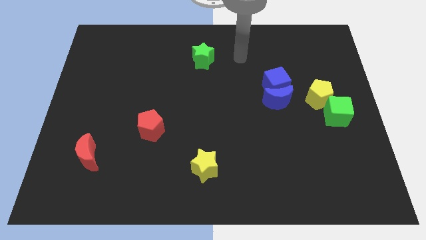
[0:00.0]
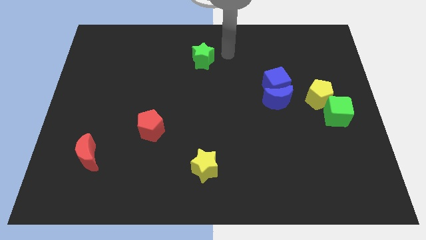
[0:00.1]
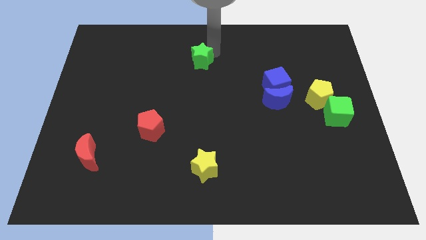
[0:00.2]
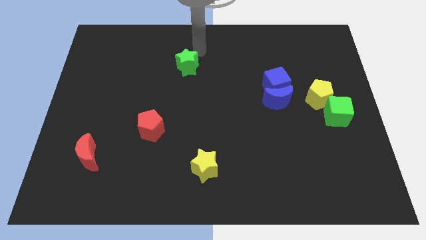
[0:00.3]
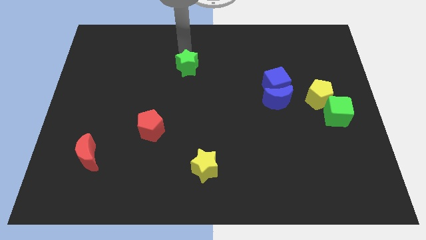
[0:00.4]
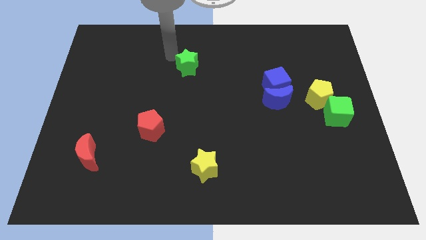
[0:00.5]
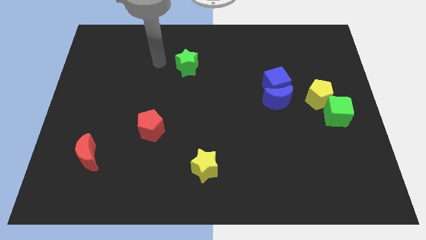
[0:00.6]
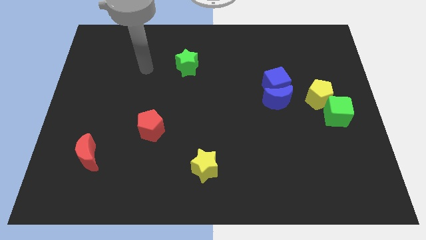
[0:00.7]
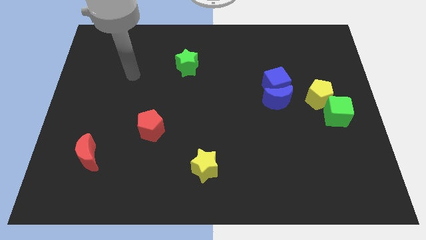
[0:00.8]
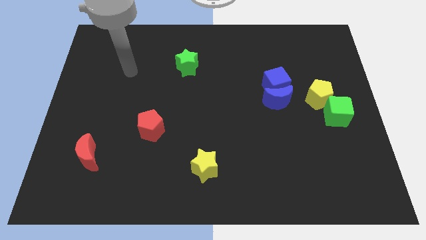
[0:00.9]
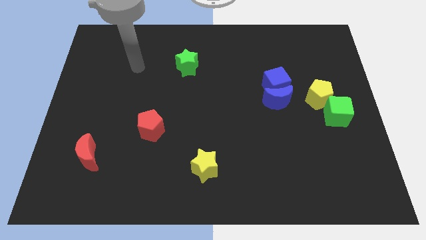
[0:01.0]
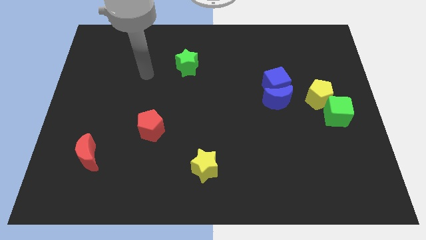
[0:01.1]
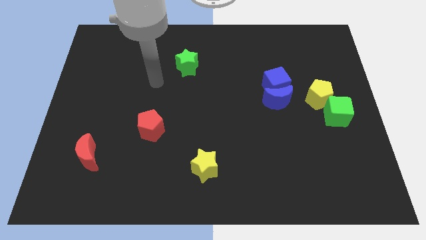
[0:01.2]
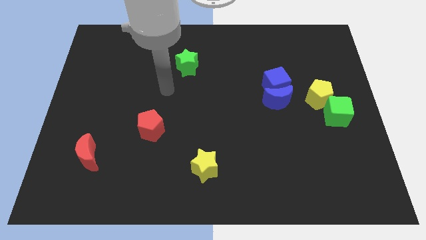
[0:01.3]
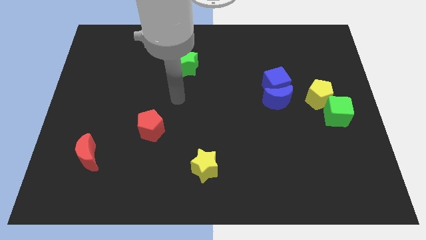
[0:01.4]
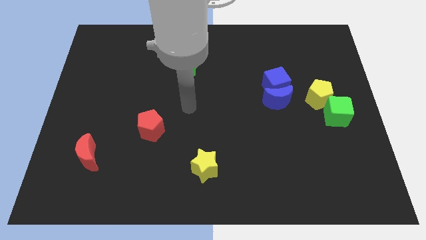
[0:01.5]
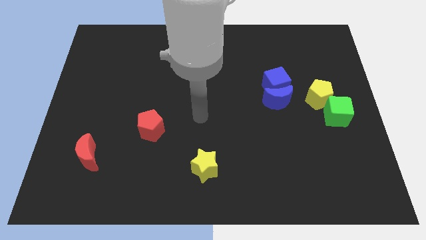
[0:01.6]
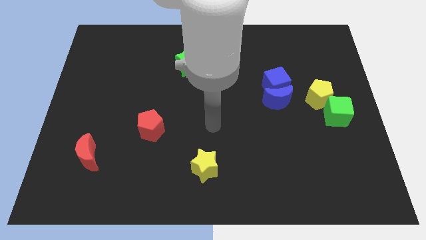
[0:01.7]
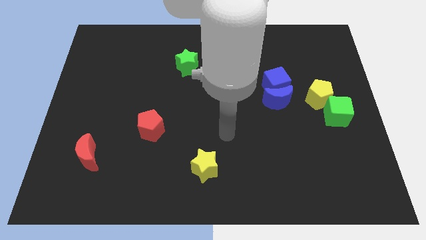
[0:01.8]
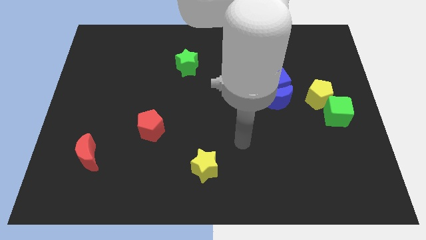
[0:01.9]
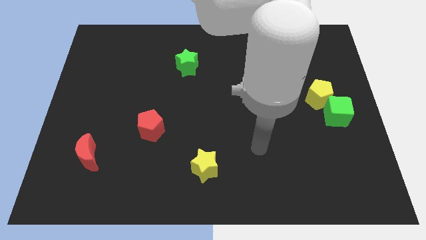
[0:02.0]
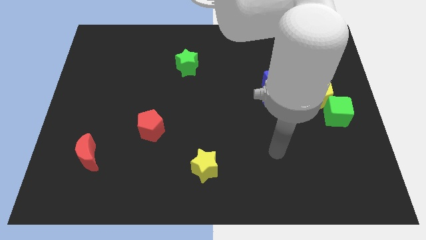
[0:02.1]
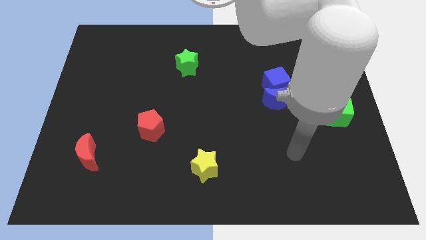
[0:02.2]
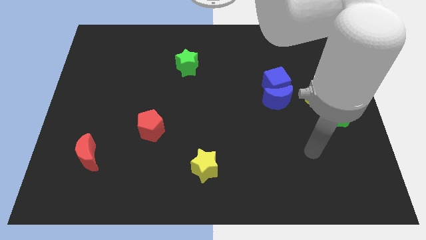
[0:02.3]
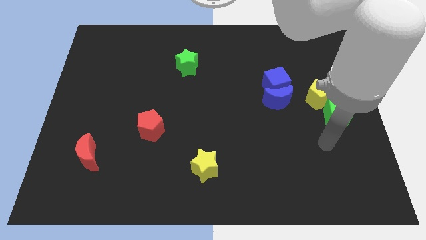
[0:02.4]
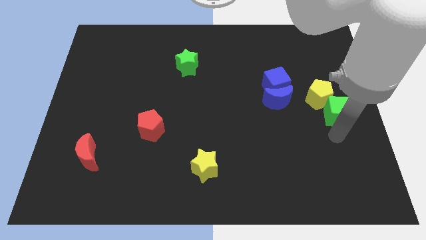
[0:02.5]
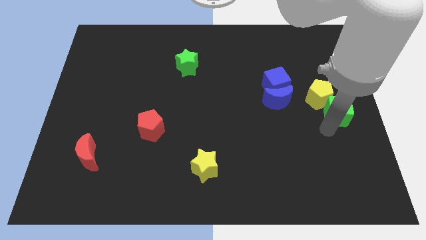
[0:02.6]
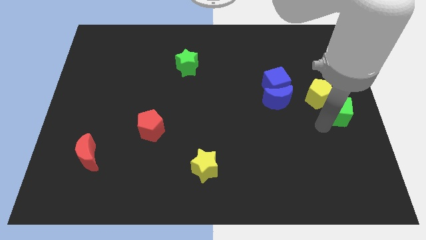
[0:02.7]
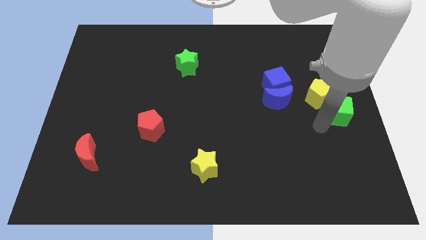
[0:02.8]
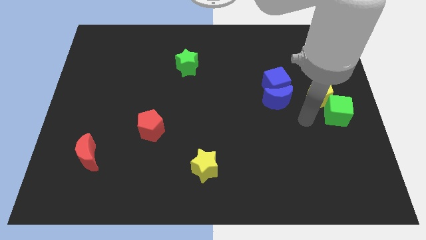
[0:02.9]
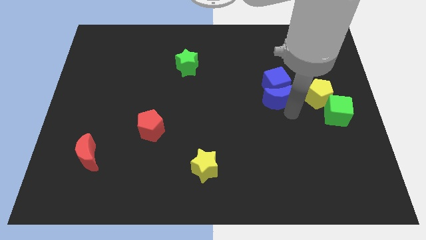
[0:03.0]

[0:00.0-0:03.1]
point the arm at the bottom of the blue moon

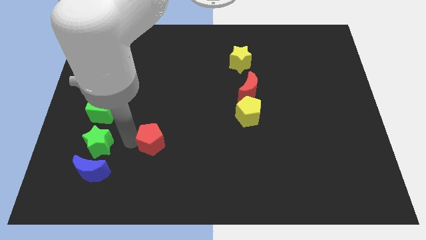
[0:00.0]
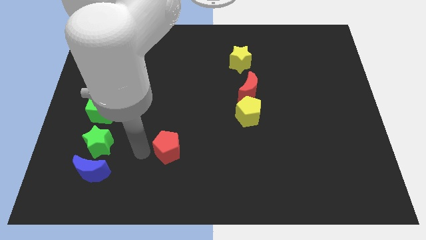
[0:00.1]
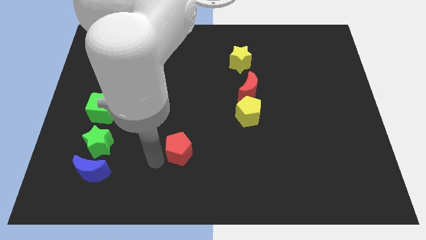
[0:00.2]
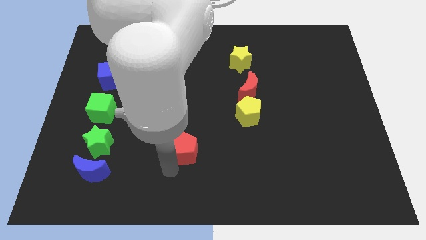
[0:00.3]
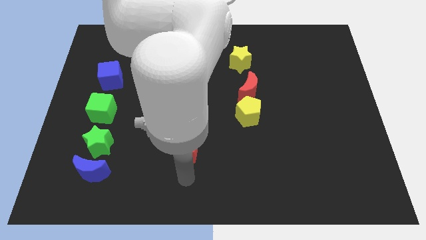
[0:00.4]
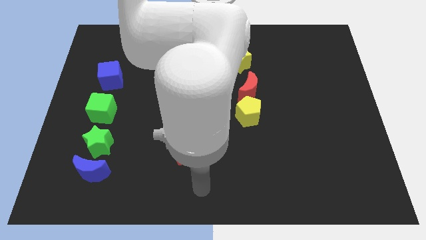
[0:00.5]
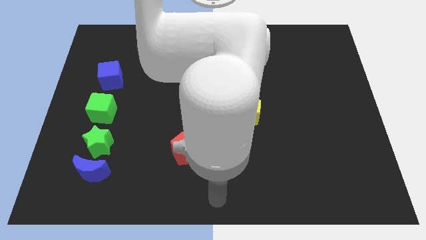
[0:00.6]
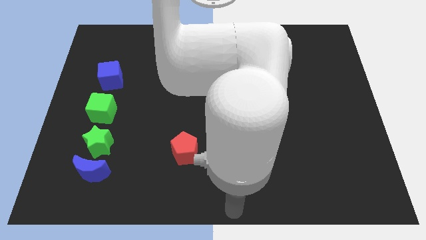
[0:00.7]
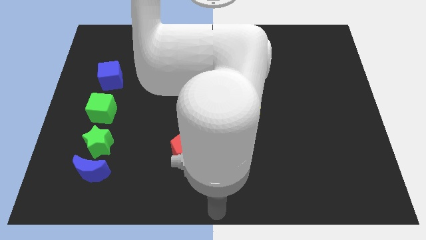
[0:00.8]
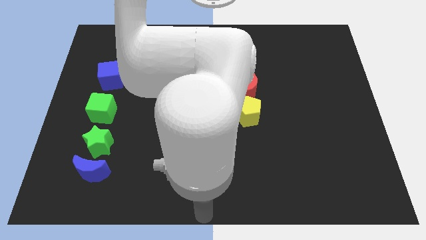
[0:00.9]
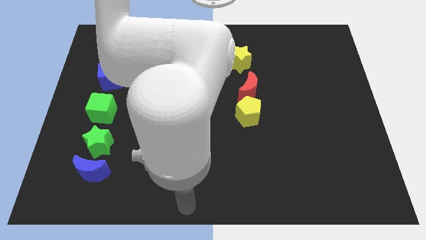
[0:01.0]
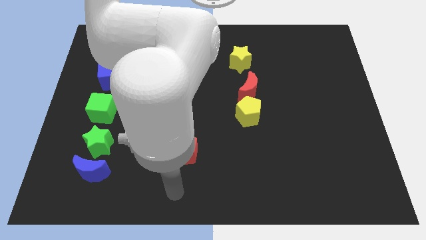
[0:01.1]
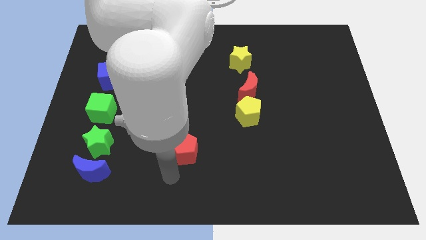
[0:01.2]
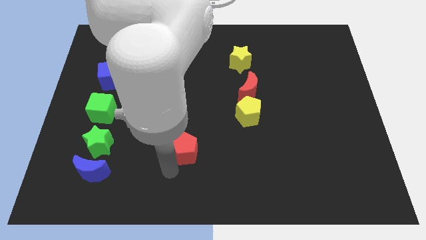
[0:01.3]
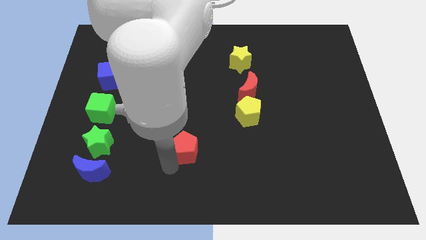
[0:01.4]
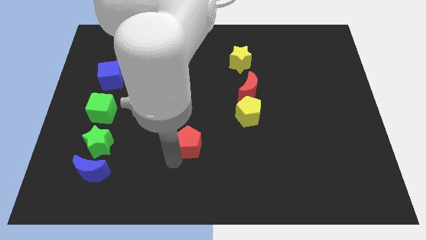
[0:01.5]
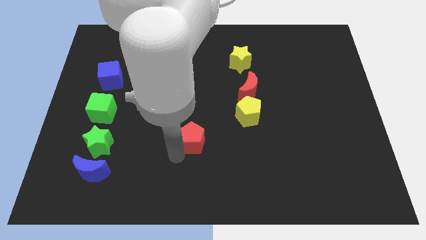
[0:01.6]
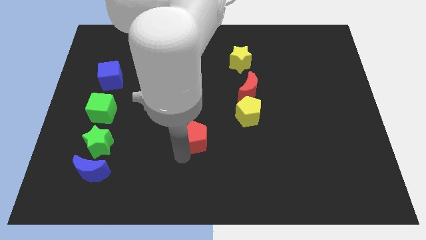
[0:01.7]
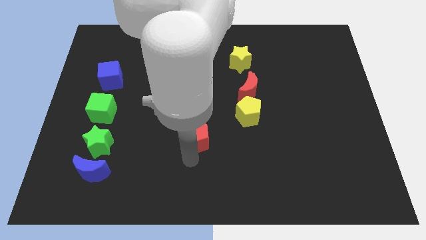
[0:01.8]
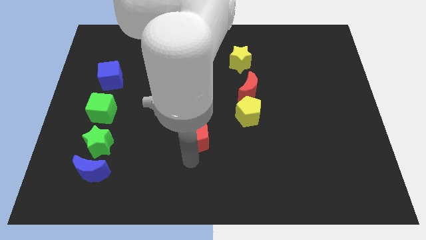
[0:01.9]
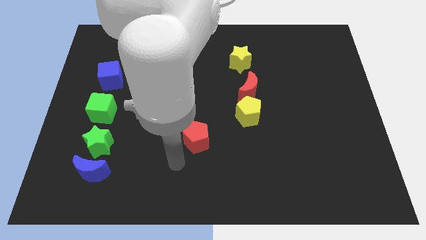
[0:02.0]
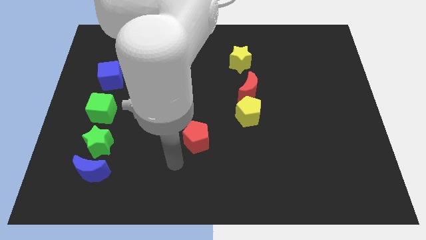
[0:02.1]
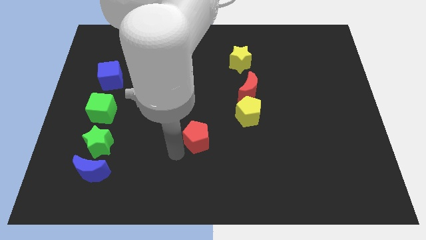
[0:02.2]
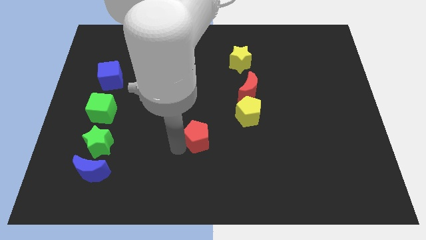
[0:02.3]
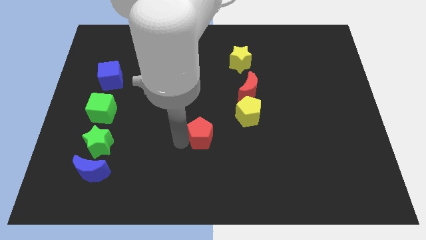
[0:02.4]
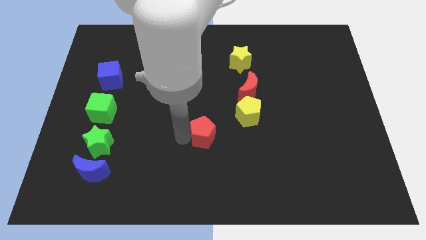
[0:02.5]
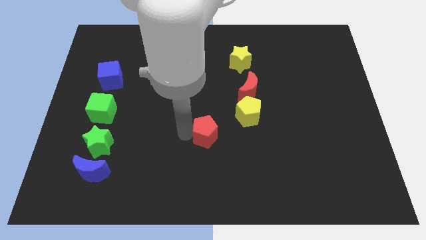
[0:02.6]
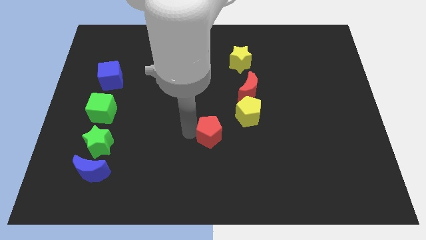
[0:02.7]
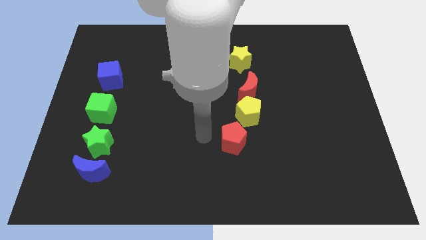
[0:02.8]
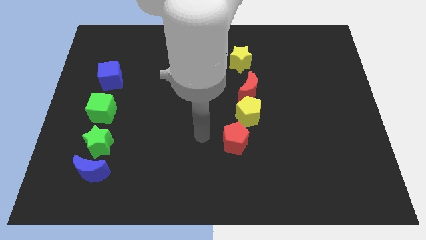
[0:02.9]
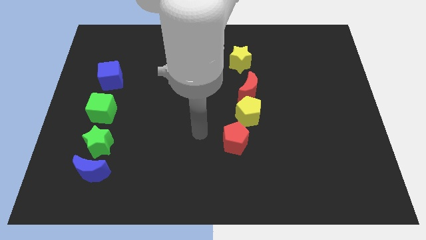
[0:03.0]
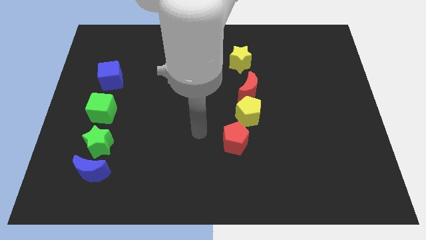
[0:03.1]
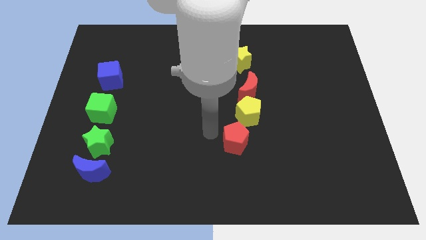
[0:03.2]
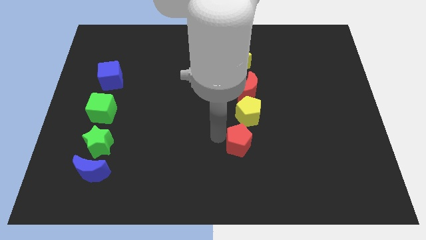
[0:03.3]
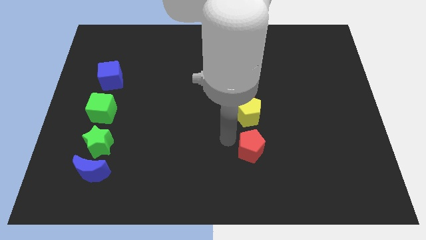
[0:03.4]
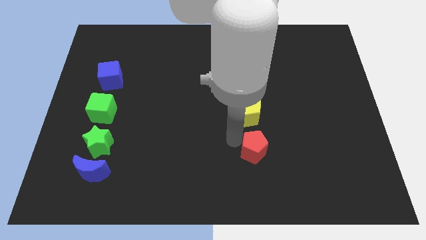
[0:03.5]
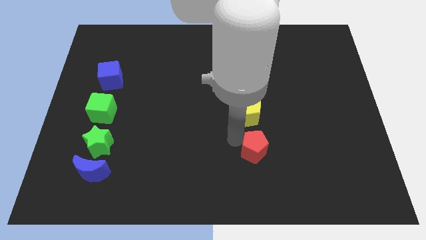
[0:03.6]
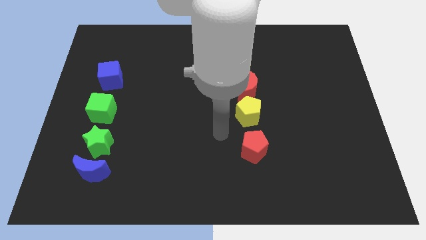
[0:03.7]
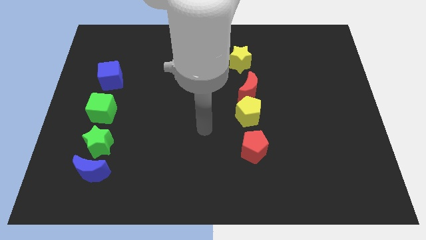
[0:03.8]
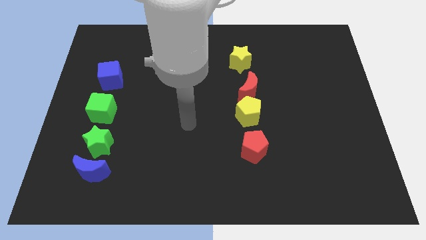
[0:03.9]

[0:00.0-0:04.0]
place the red pentagon below the yellow pentagon

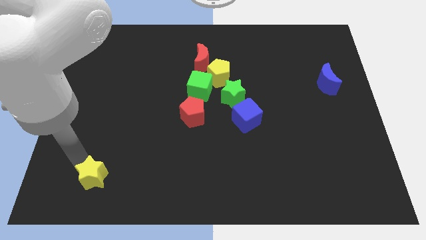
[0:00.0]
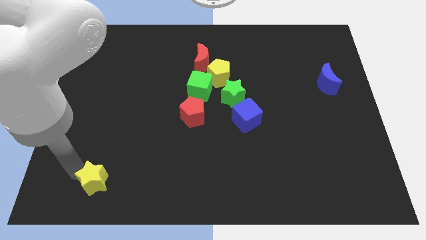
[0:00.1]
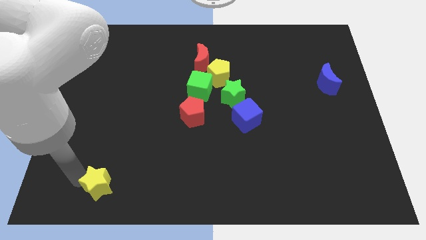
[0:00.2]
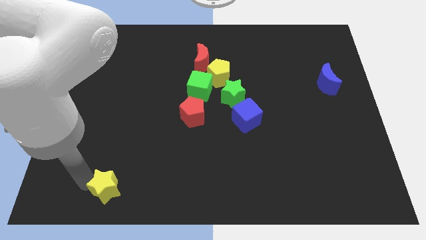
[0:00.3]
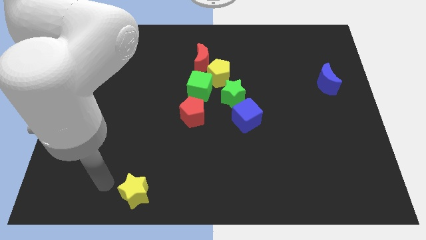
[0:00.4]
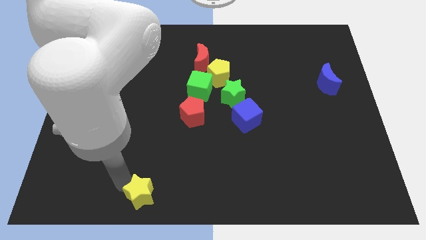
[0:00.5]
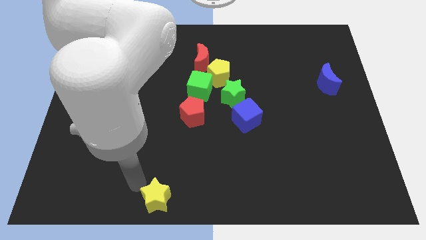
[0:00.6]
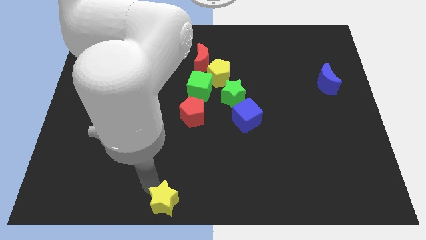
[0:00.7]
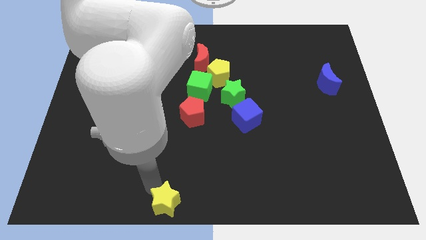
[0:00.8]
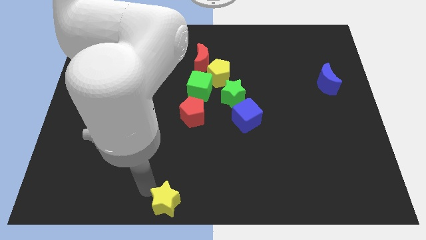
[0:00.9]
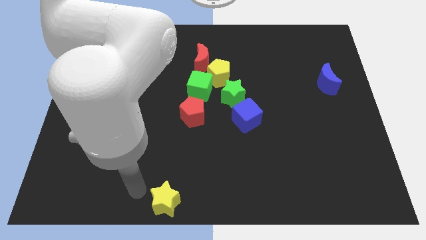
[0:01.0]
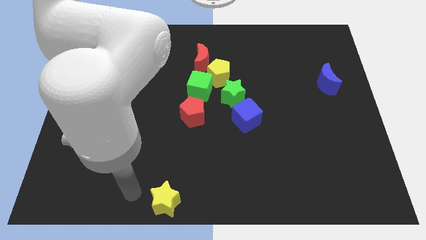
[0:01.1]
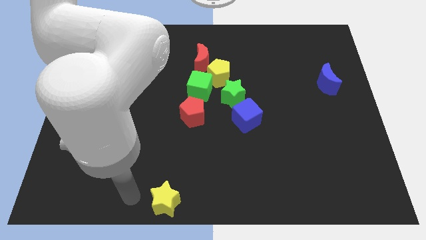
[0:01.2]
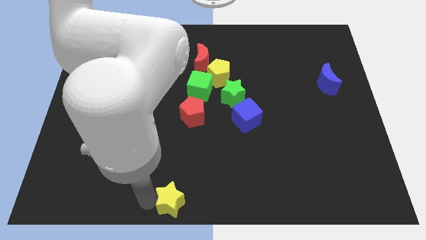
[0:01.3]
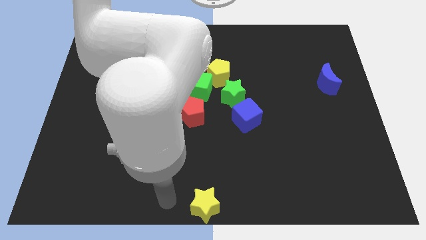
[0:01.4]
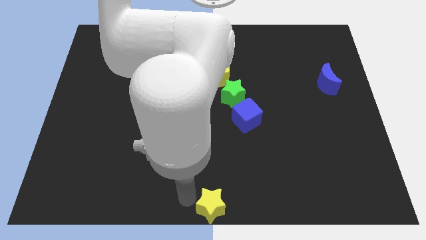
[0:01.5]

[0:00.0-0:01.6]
move the yellow star to the bottom centre of the board

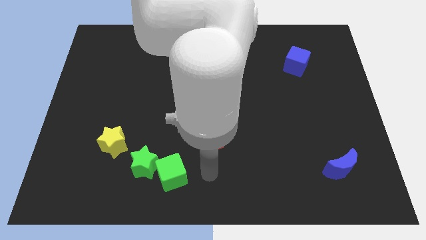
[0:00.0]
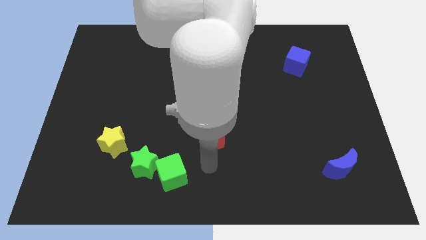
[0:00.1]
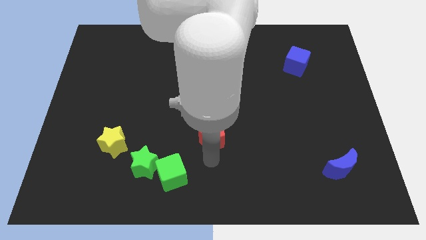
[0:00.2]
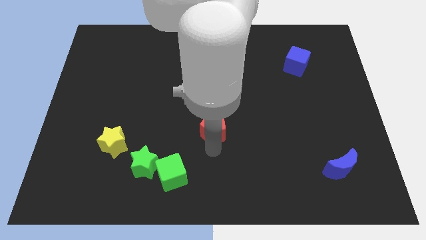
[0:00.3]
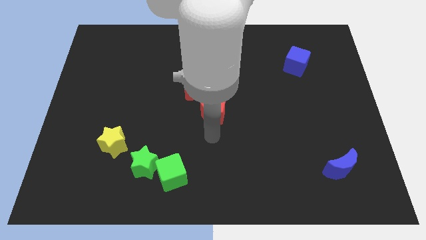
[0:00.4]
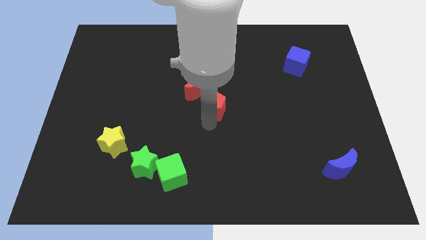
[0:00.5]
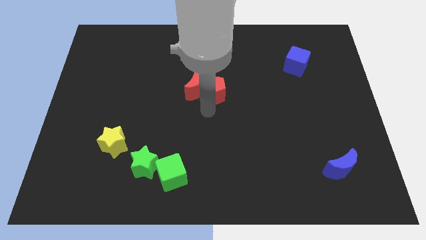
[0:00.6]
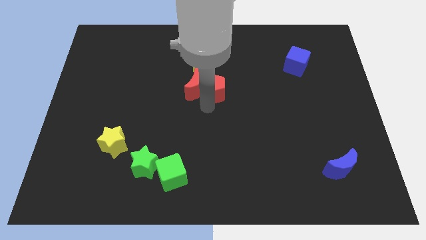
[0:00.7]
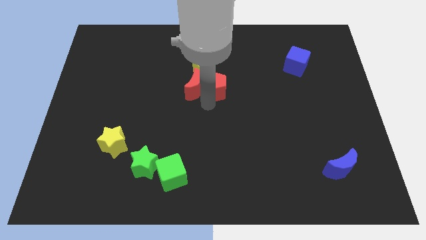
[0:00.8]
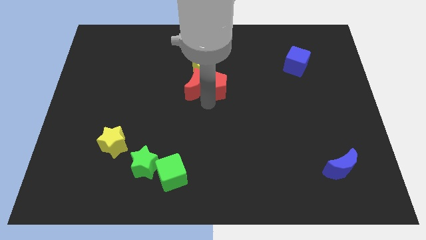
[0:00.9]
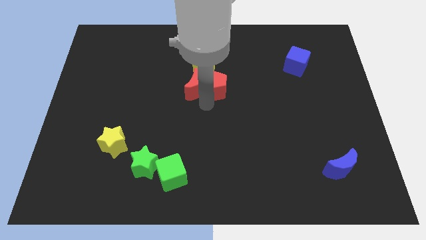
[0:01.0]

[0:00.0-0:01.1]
drag the red pentagon below to the yellow pentagon
